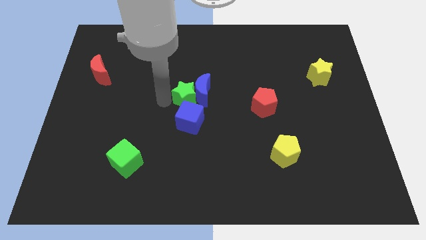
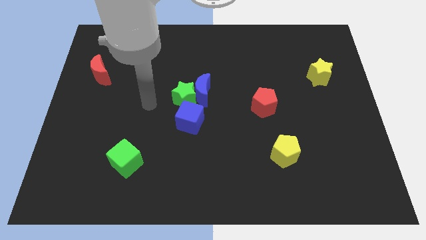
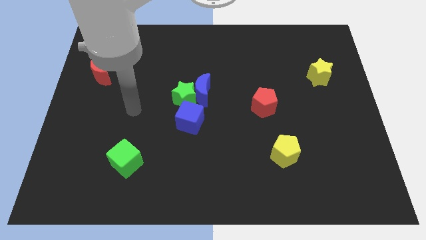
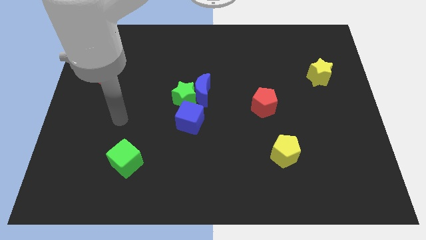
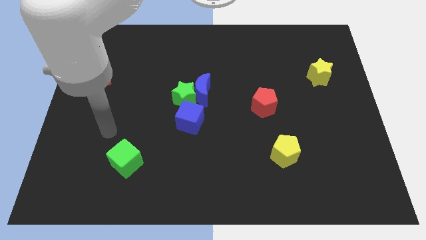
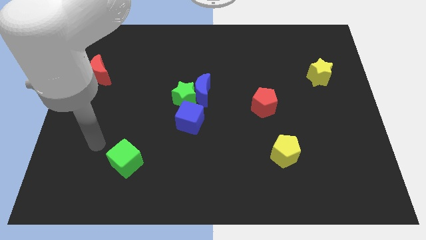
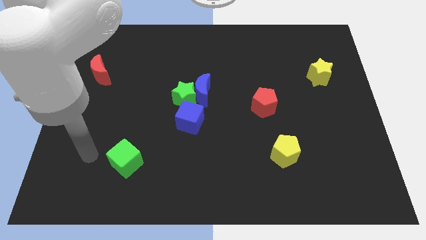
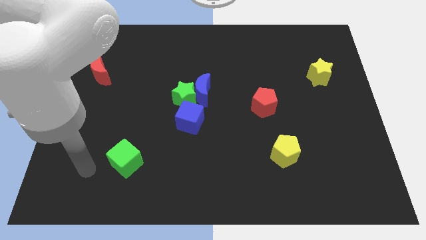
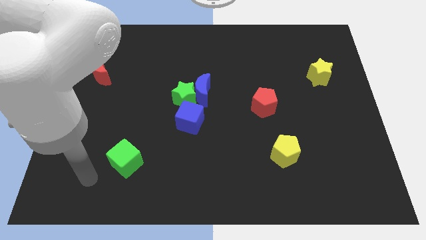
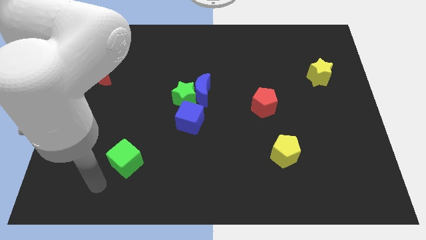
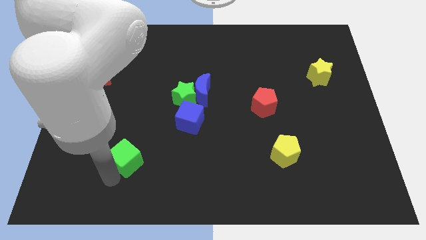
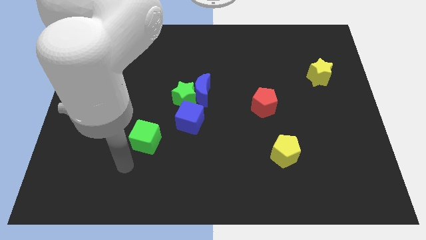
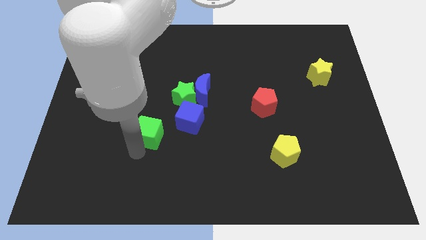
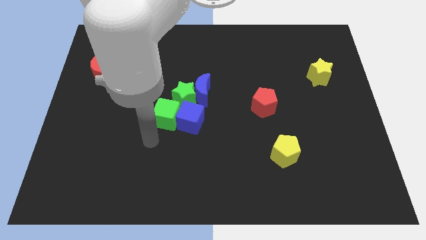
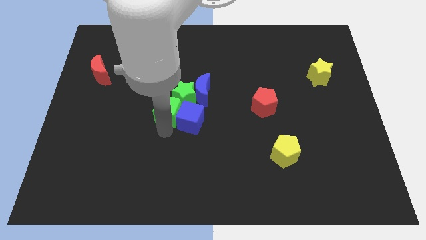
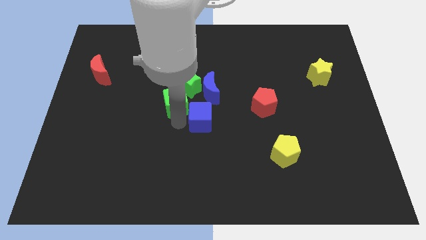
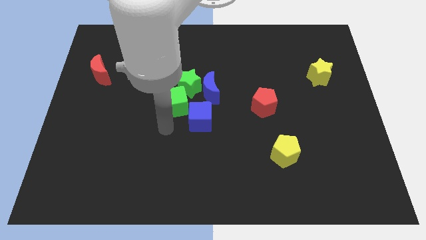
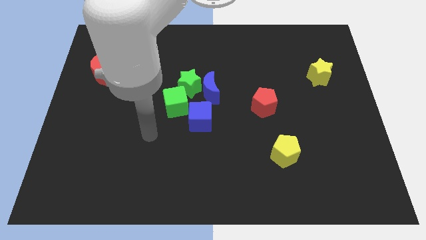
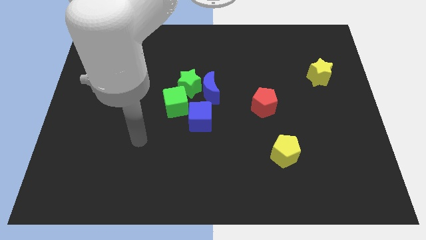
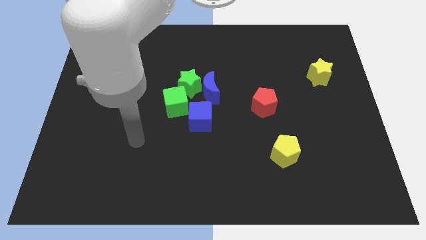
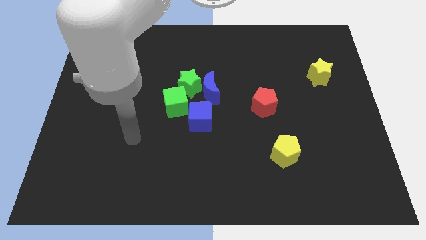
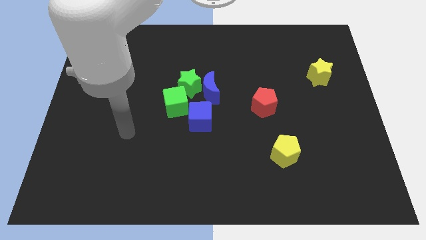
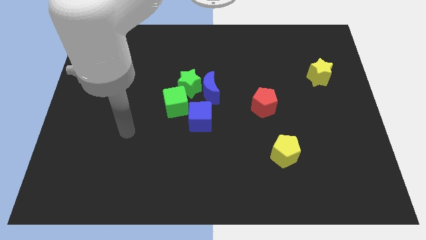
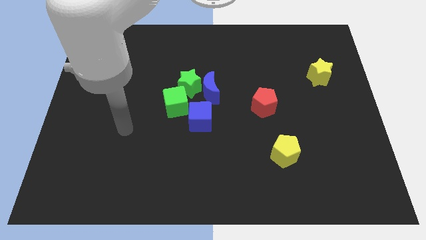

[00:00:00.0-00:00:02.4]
push the green cube into green star

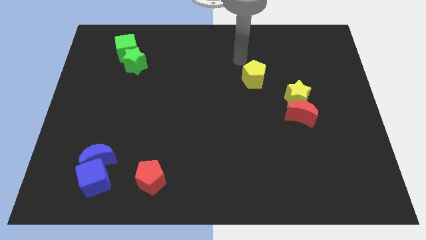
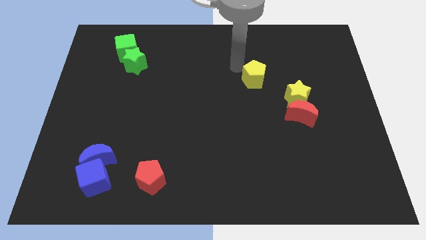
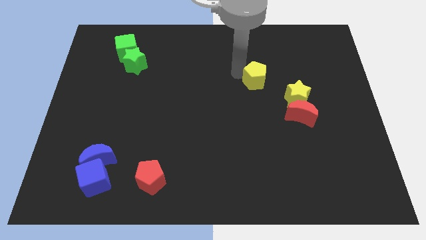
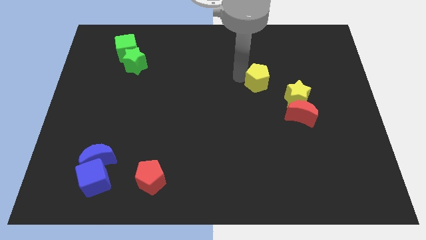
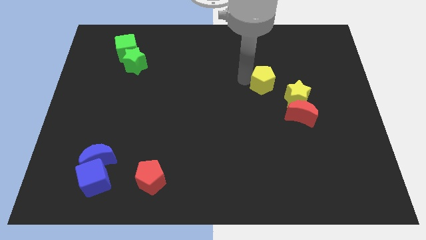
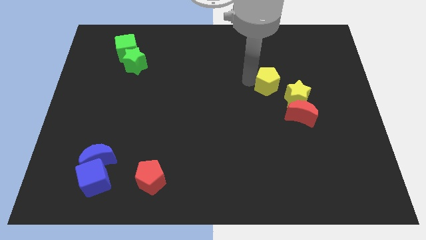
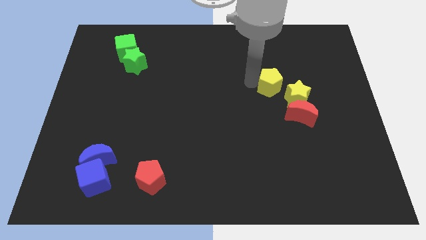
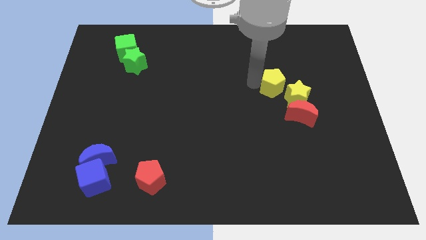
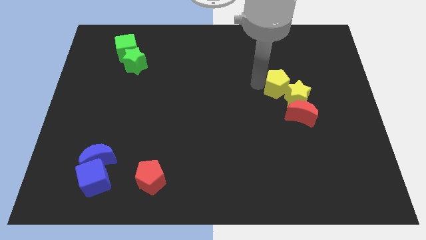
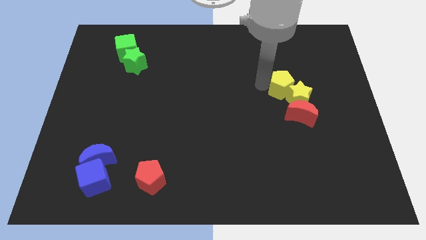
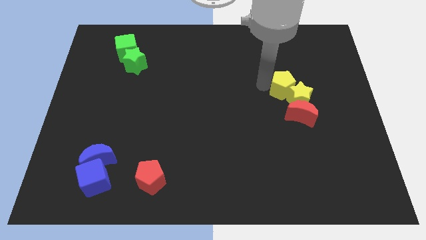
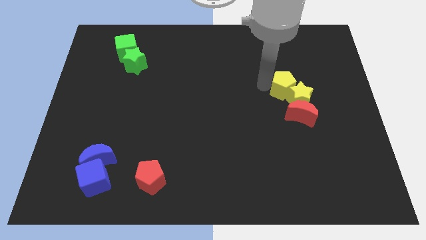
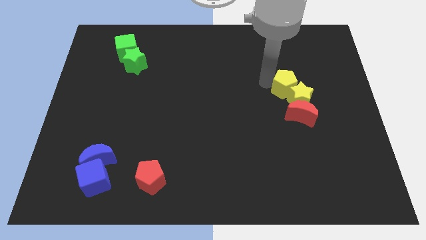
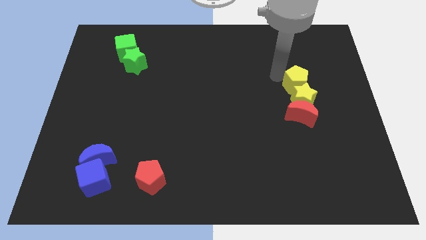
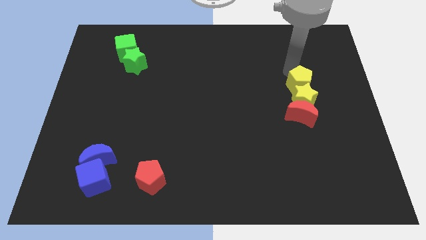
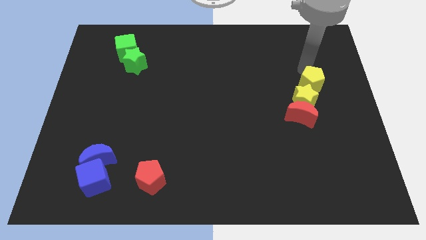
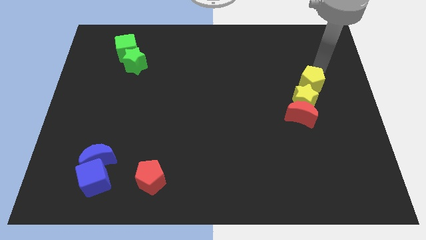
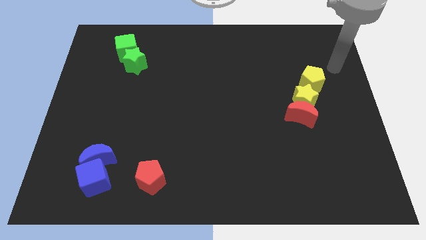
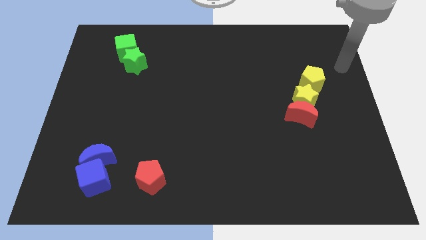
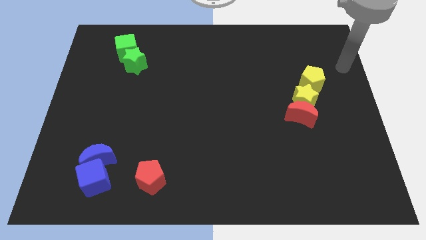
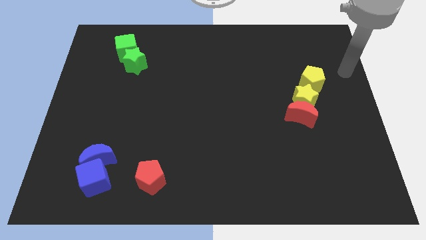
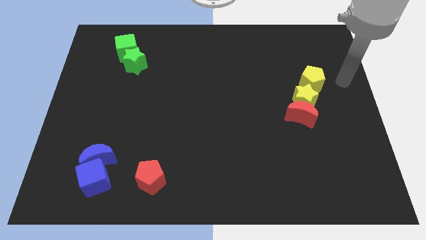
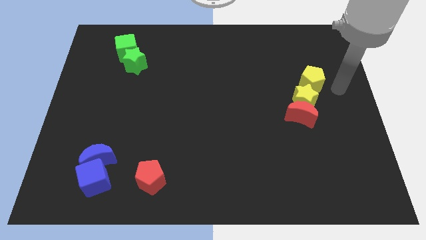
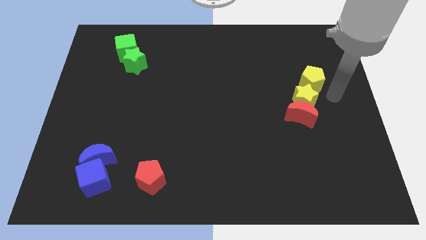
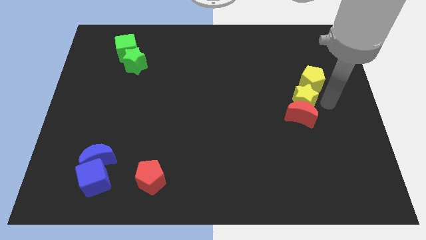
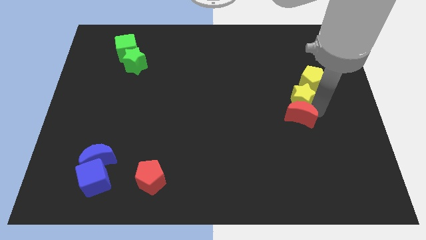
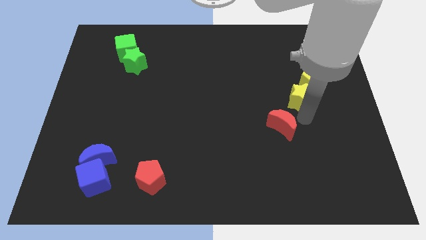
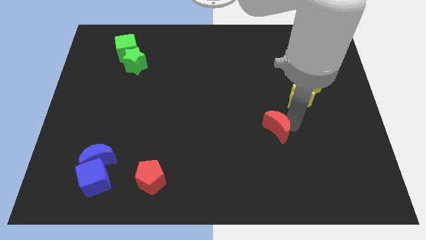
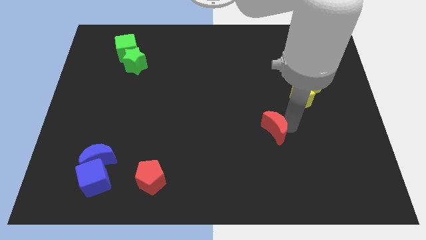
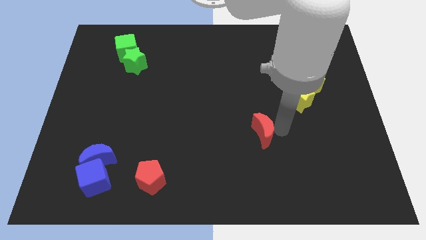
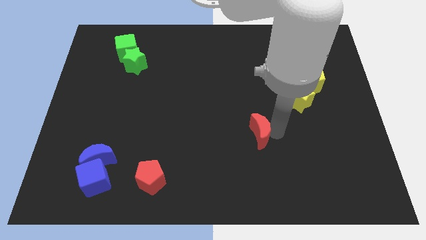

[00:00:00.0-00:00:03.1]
separate the red moon from yellow blocks

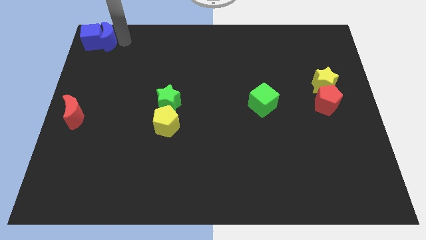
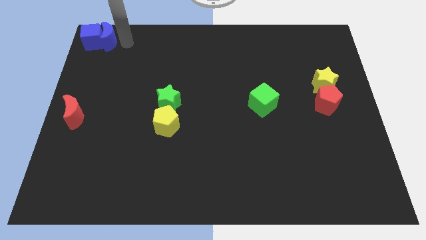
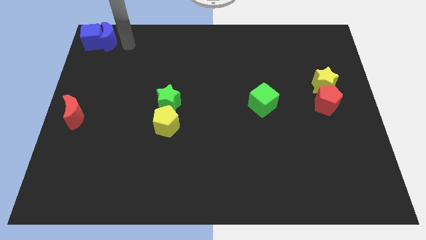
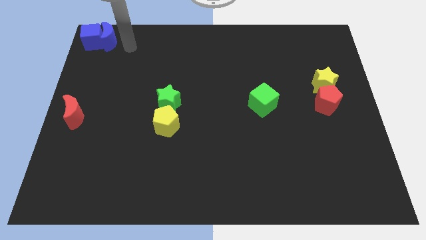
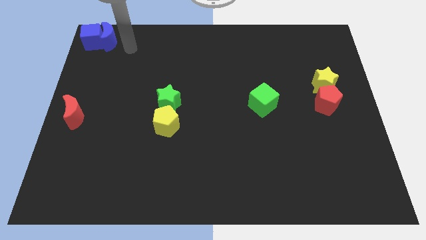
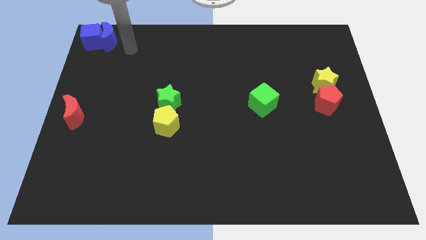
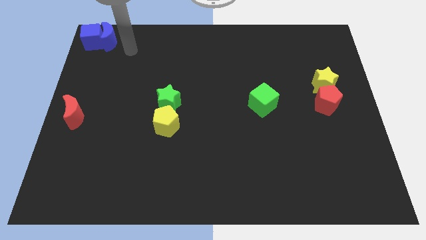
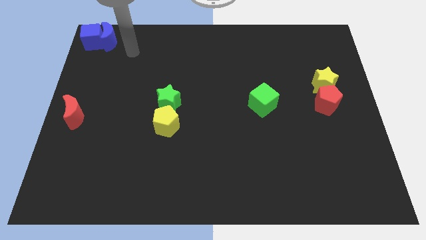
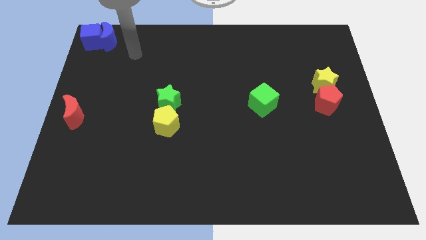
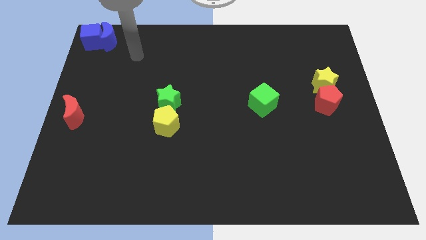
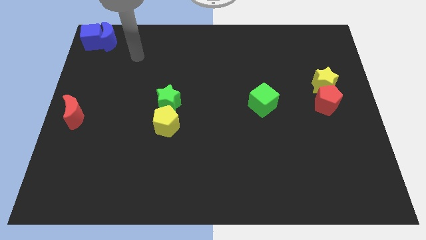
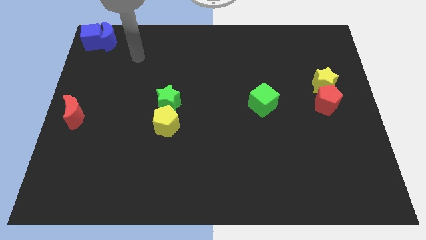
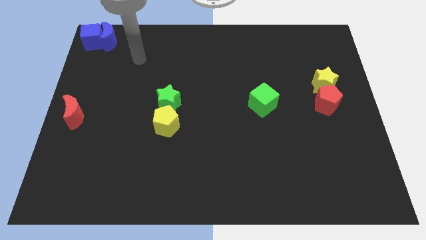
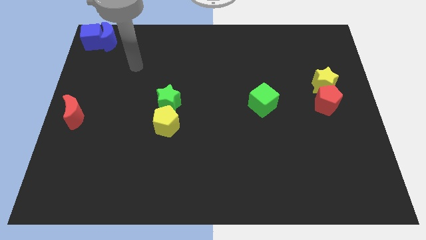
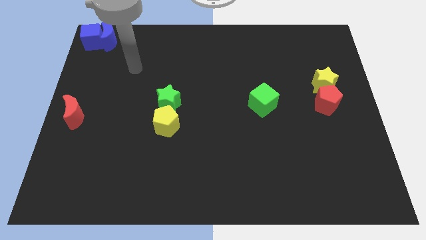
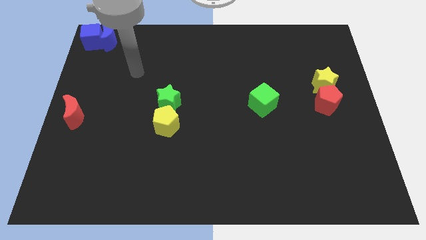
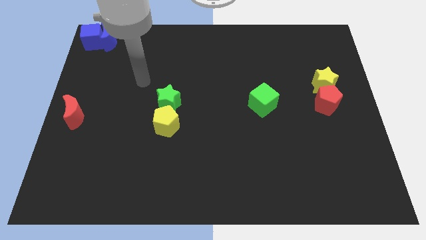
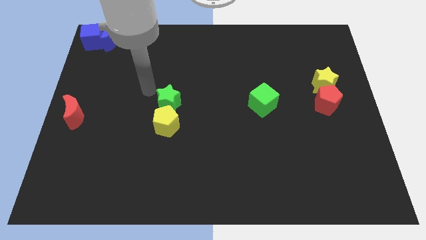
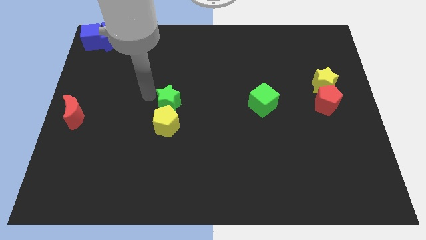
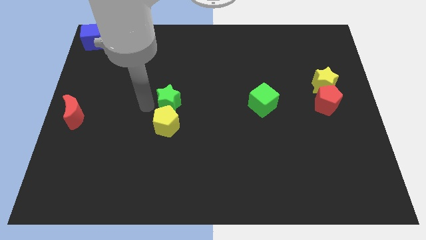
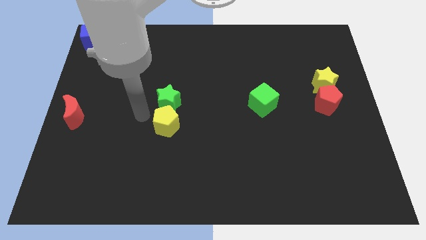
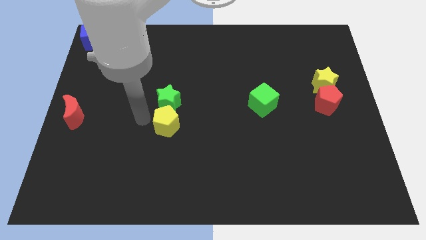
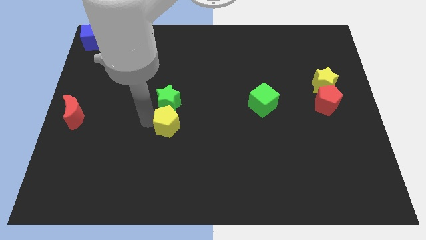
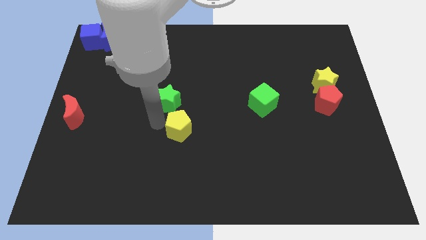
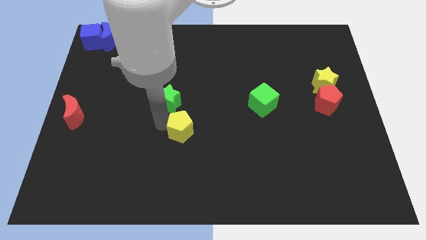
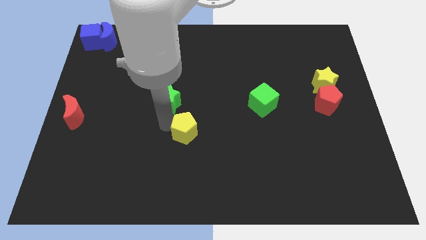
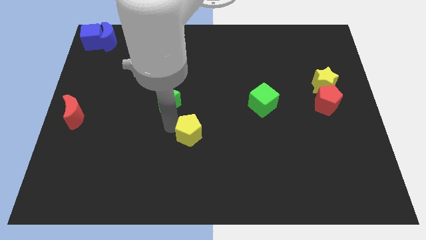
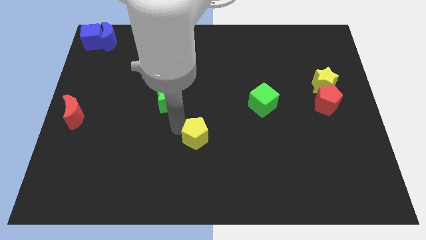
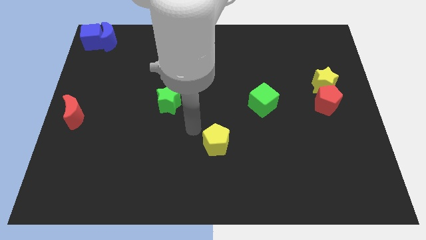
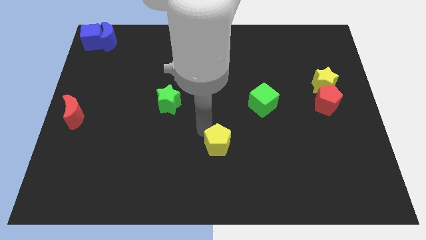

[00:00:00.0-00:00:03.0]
separate the yellow pentagon from the green star

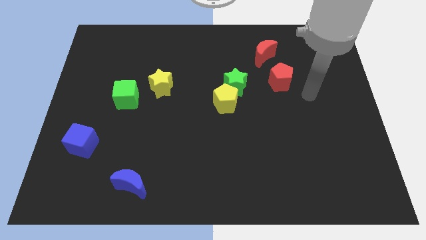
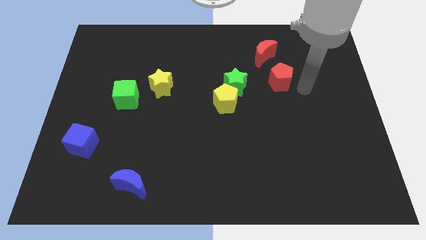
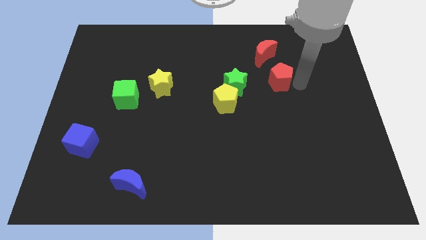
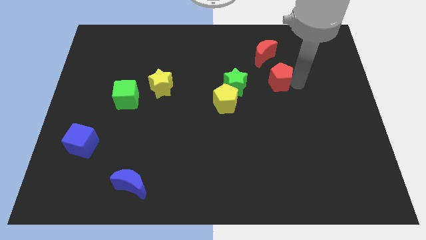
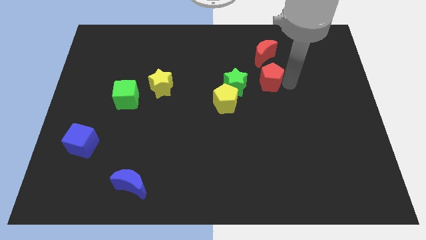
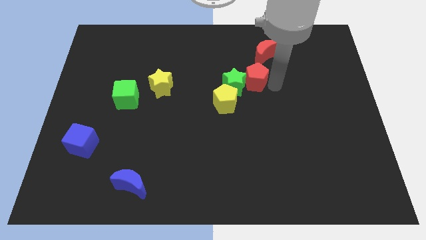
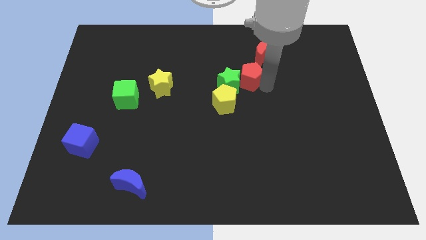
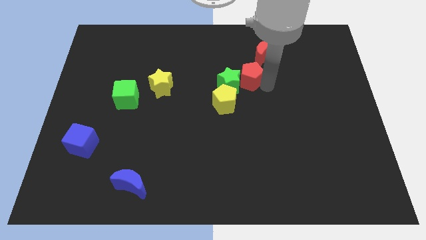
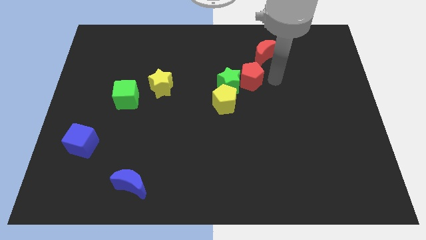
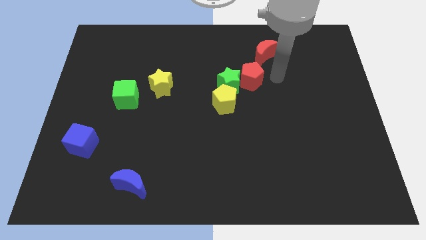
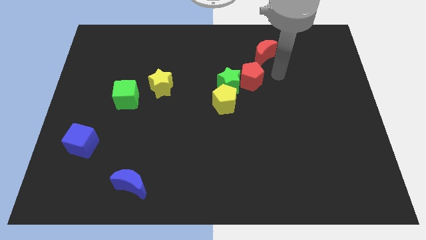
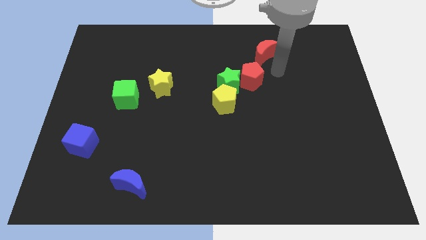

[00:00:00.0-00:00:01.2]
push the red pentagon into the right side of the green star
